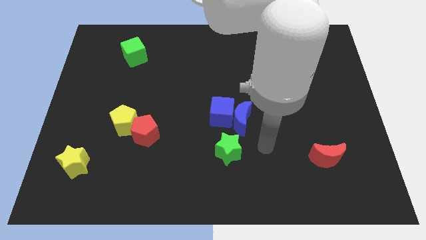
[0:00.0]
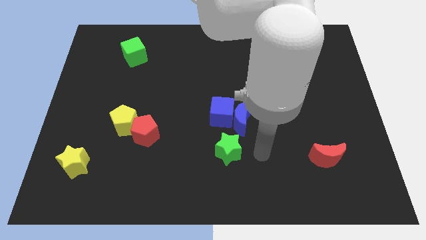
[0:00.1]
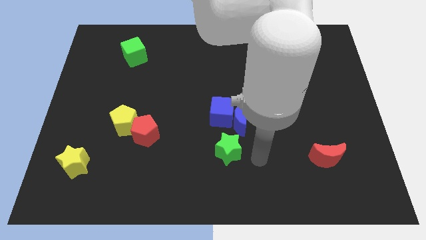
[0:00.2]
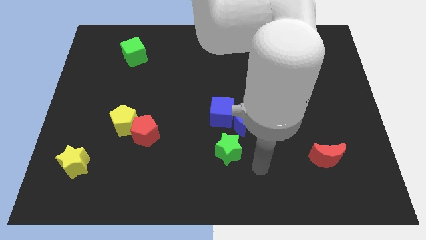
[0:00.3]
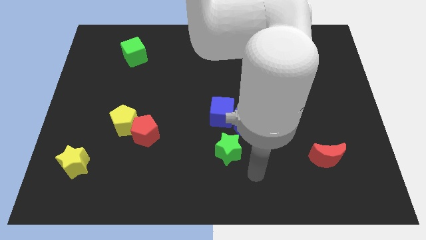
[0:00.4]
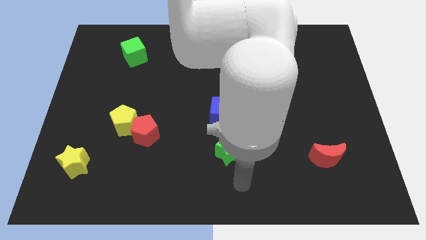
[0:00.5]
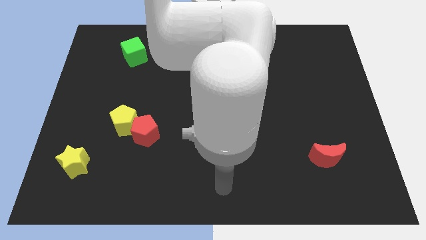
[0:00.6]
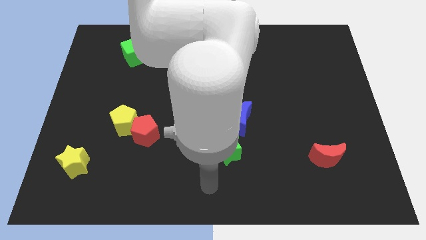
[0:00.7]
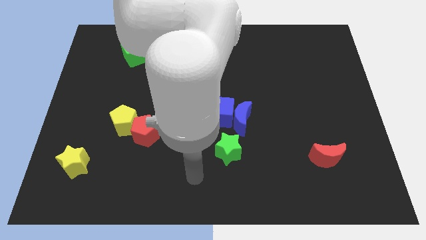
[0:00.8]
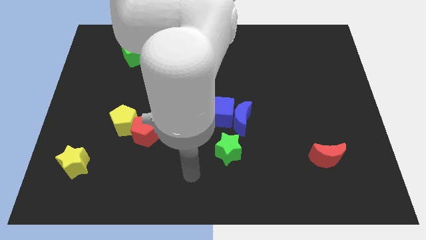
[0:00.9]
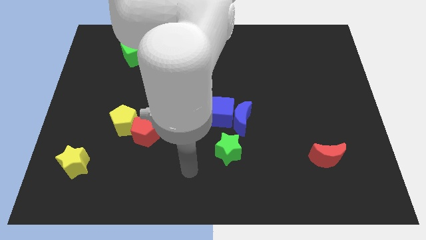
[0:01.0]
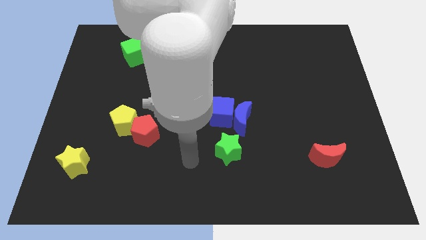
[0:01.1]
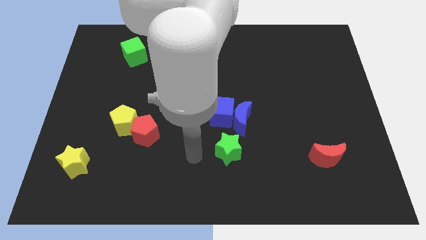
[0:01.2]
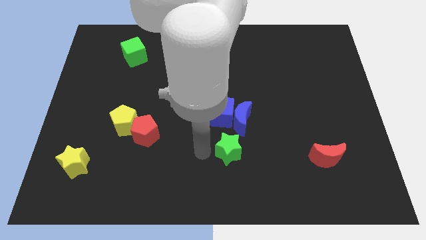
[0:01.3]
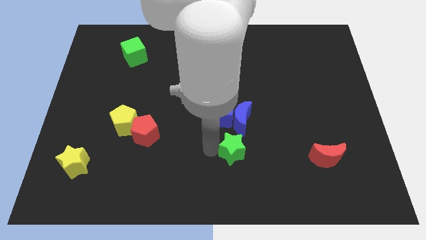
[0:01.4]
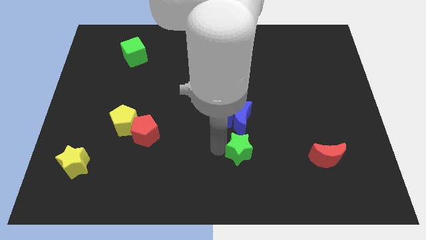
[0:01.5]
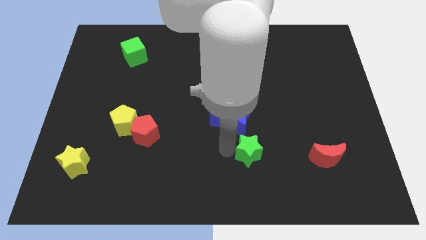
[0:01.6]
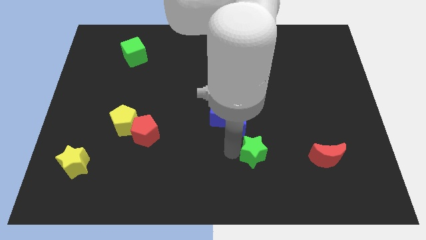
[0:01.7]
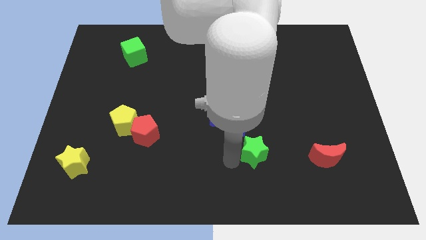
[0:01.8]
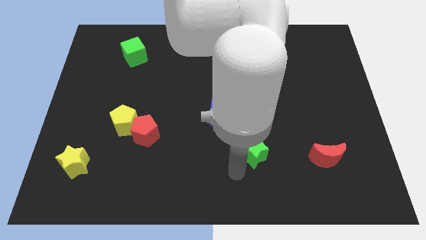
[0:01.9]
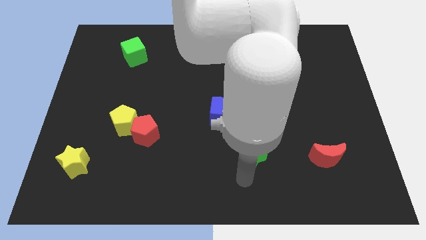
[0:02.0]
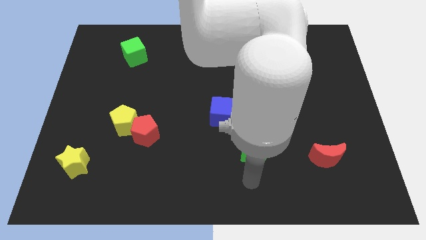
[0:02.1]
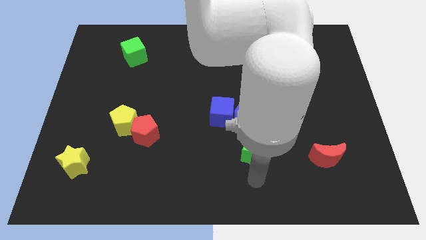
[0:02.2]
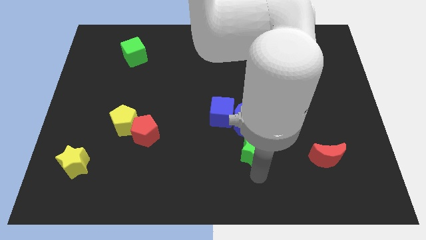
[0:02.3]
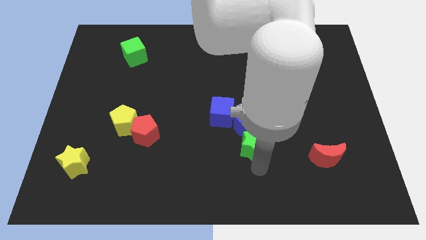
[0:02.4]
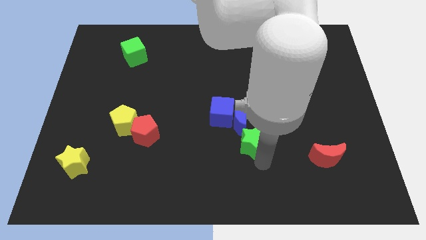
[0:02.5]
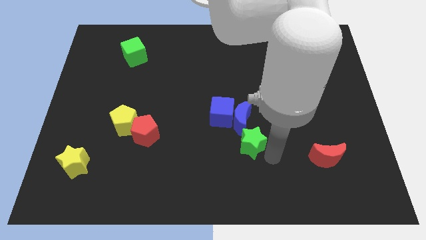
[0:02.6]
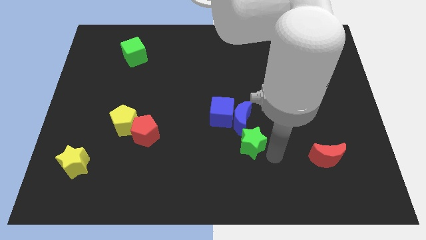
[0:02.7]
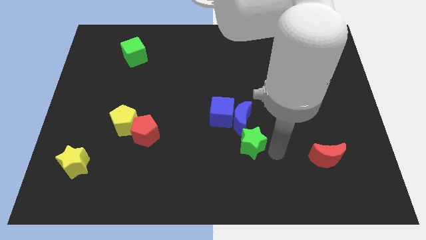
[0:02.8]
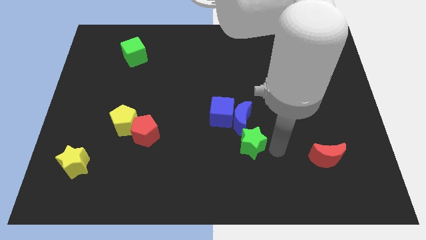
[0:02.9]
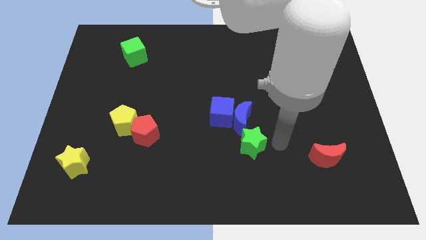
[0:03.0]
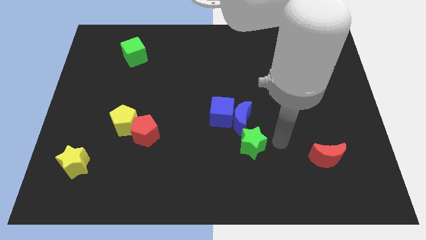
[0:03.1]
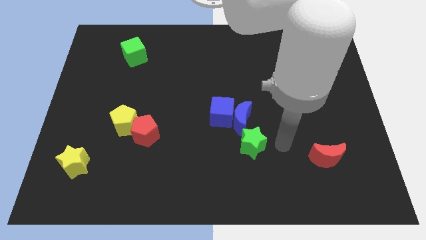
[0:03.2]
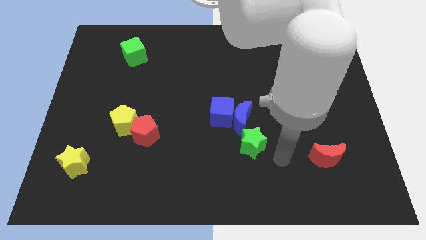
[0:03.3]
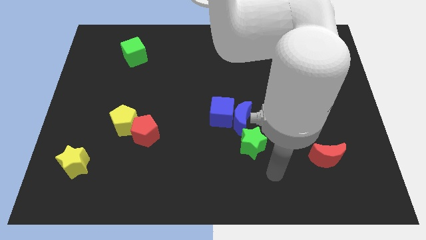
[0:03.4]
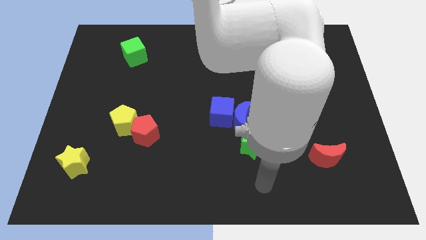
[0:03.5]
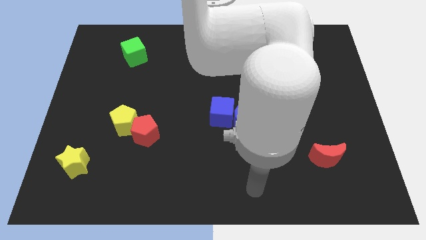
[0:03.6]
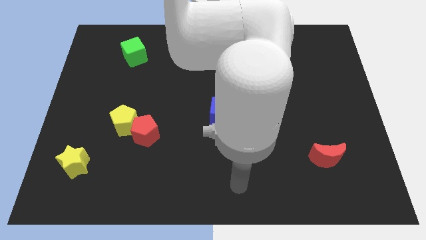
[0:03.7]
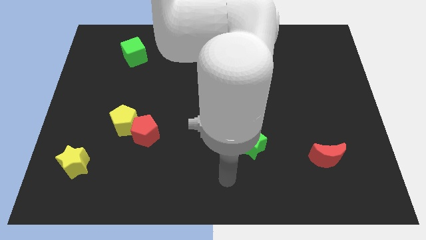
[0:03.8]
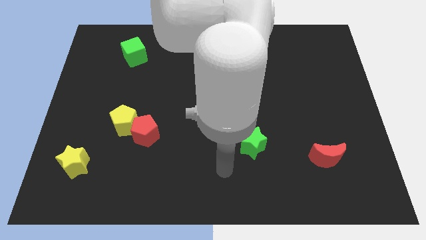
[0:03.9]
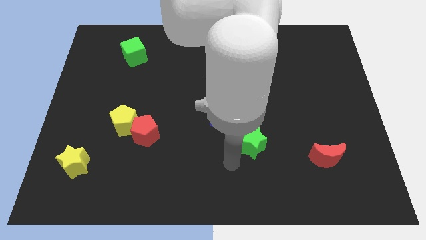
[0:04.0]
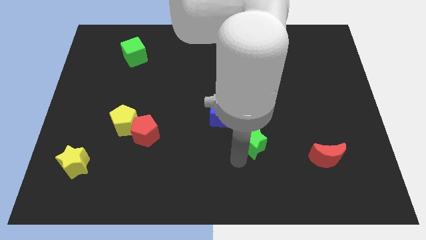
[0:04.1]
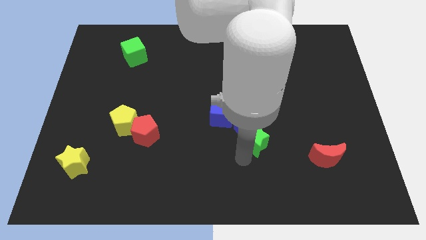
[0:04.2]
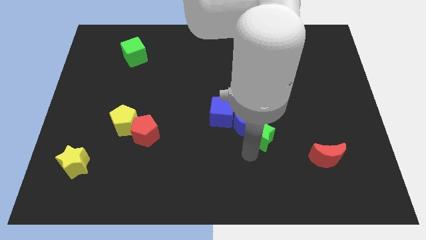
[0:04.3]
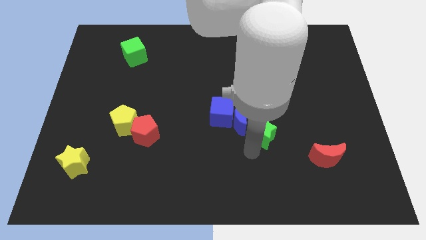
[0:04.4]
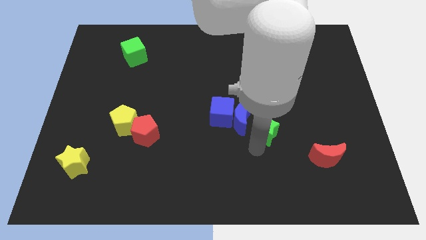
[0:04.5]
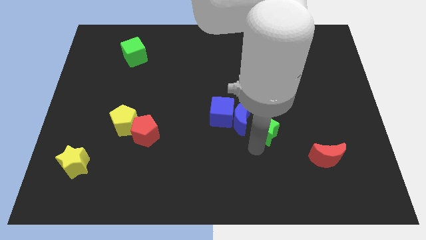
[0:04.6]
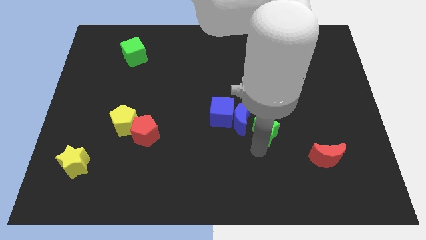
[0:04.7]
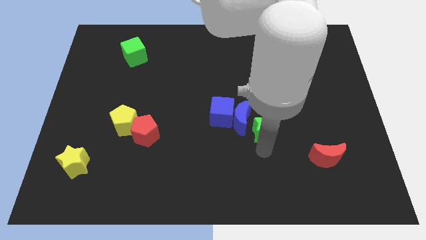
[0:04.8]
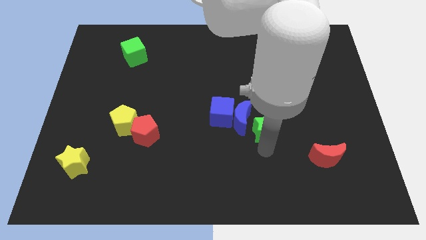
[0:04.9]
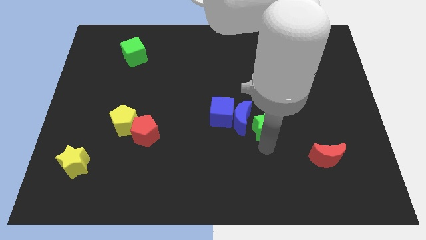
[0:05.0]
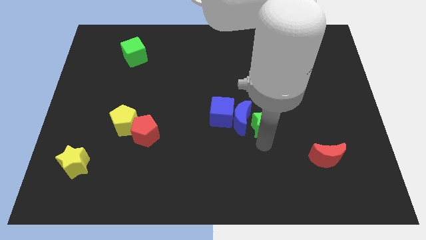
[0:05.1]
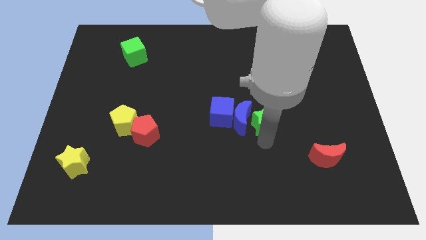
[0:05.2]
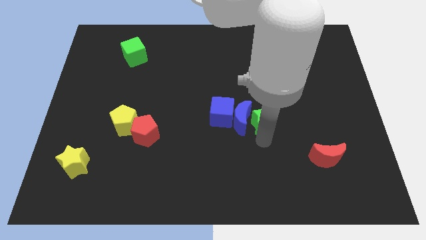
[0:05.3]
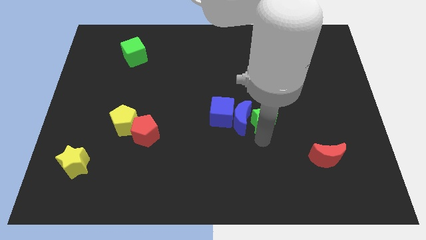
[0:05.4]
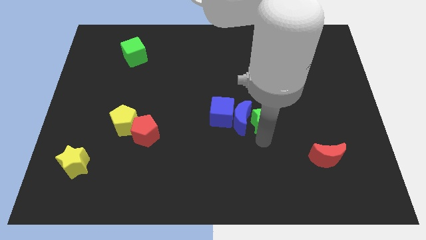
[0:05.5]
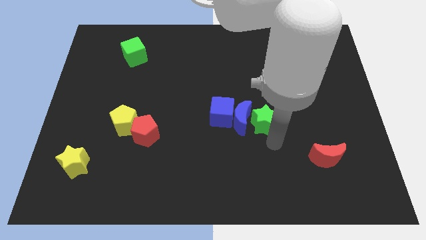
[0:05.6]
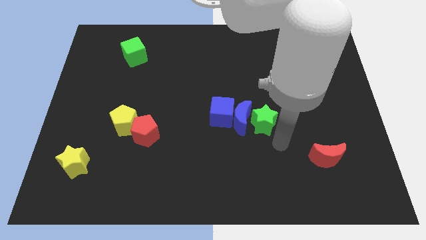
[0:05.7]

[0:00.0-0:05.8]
put the green star on the right side of the blue crescent

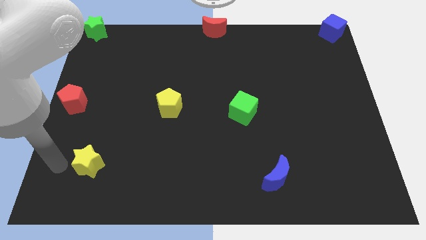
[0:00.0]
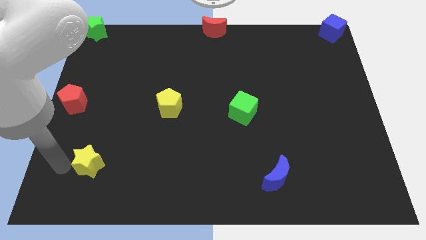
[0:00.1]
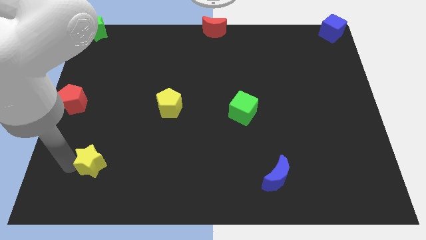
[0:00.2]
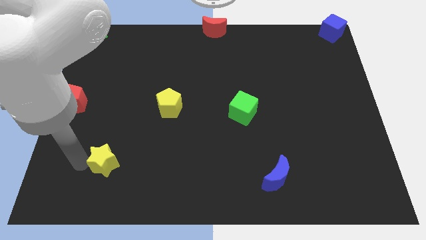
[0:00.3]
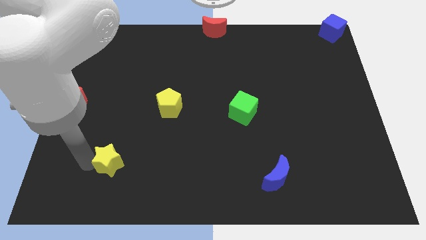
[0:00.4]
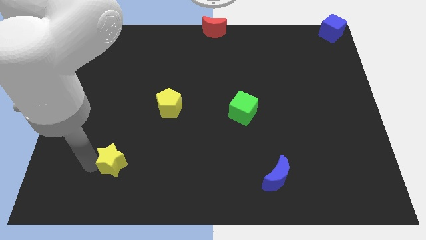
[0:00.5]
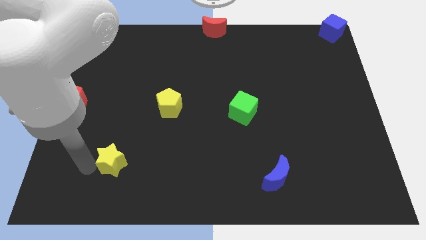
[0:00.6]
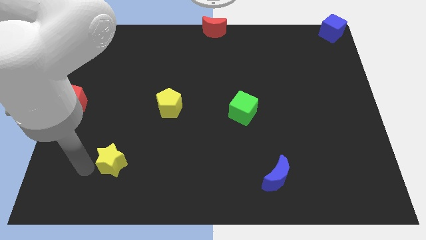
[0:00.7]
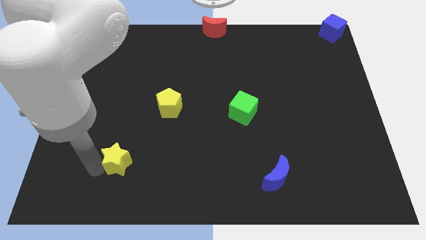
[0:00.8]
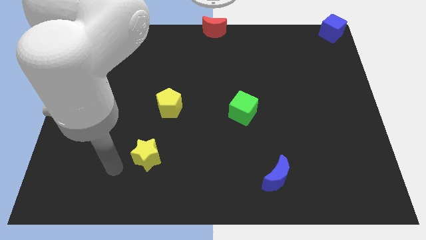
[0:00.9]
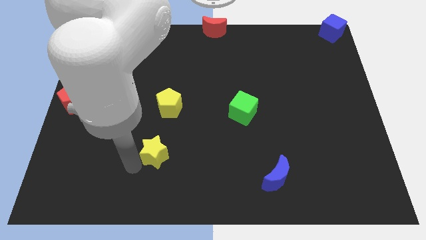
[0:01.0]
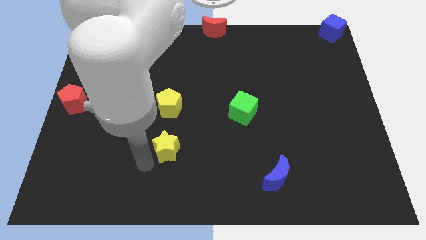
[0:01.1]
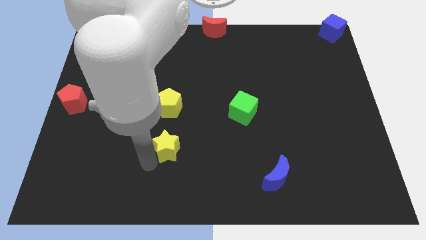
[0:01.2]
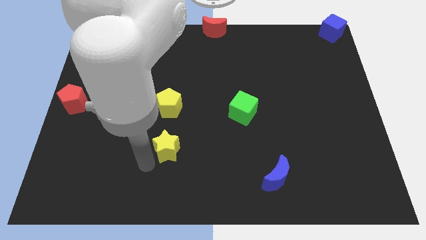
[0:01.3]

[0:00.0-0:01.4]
move the yellow star vertically below the yellow pentagon

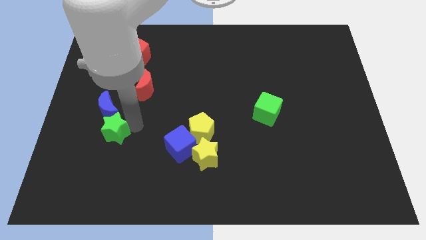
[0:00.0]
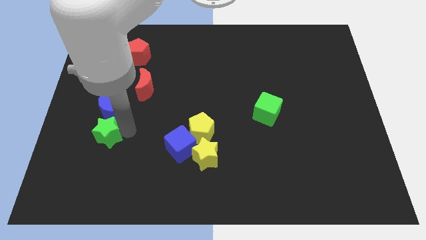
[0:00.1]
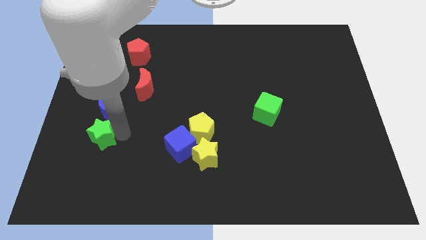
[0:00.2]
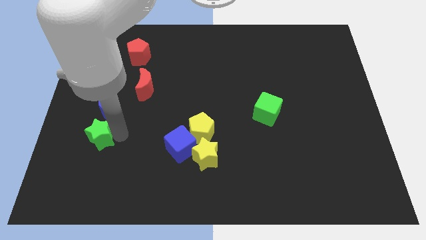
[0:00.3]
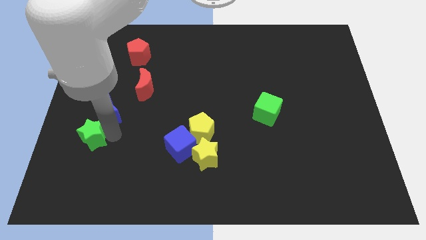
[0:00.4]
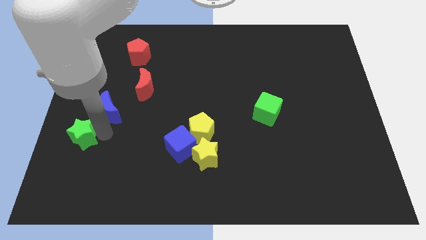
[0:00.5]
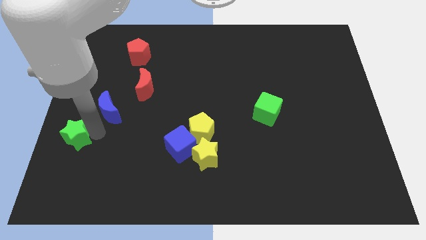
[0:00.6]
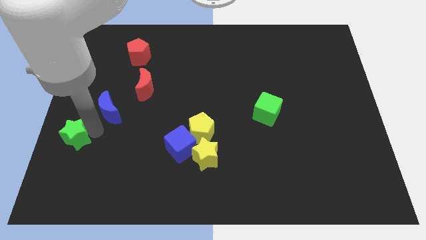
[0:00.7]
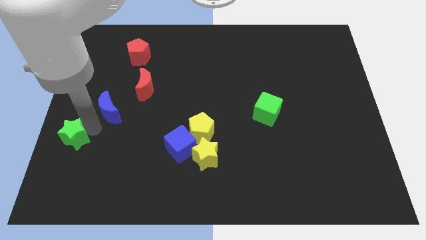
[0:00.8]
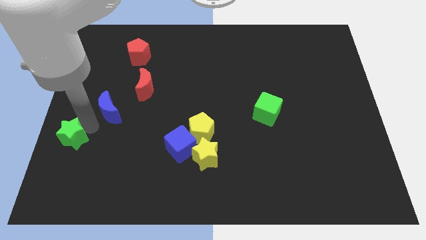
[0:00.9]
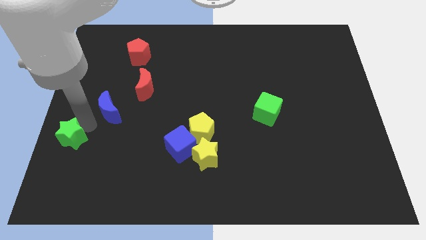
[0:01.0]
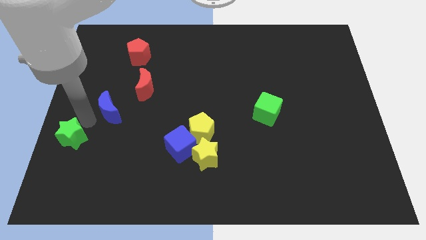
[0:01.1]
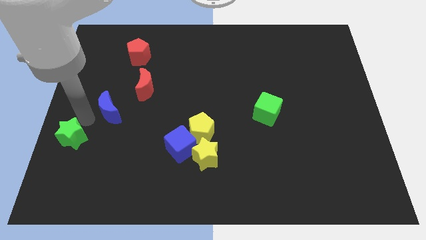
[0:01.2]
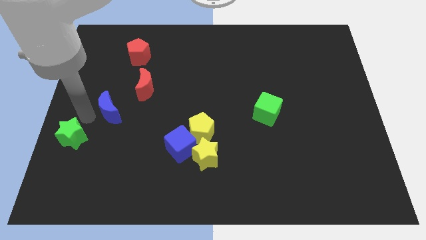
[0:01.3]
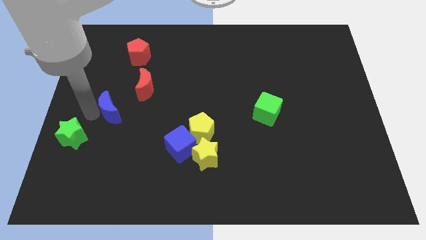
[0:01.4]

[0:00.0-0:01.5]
push green star slightly towards left

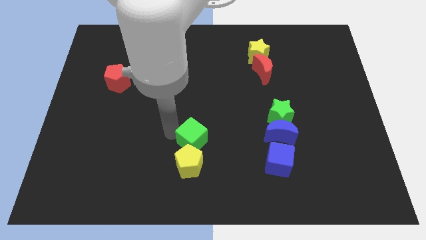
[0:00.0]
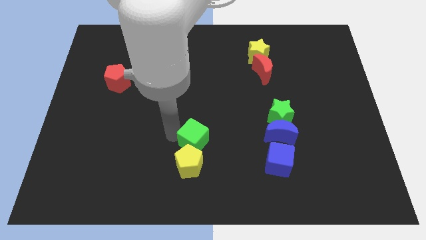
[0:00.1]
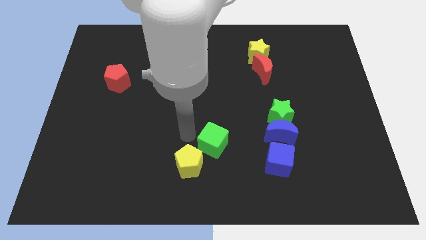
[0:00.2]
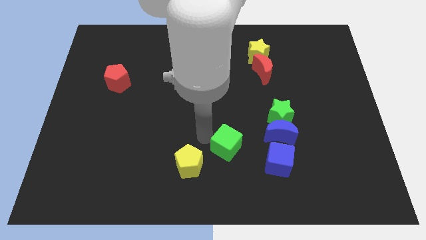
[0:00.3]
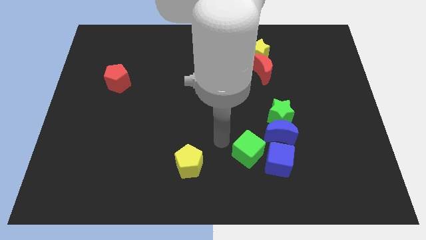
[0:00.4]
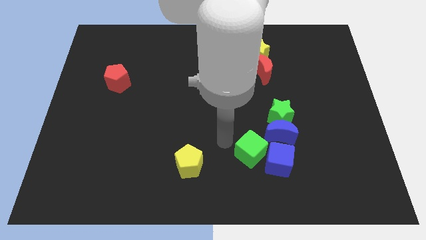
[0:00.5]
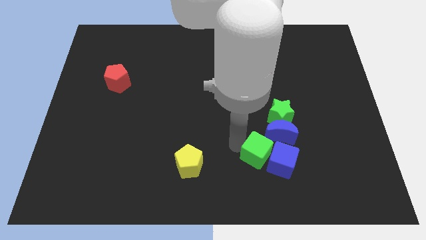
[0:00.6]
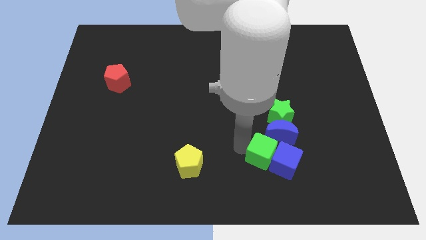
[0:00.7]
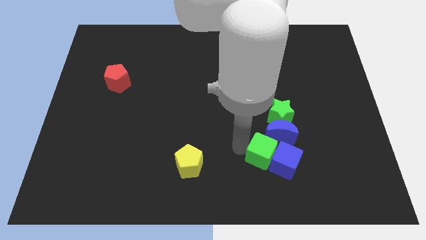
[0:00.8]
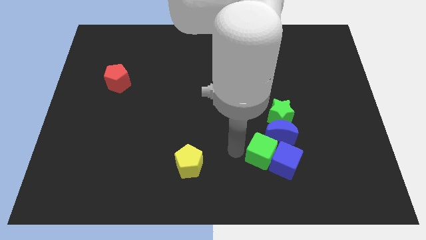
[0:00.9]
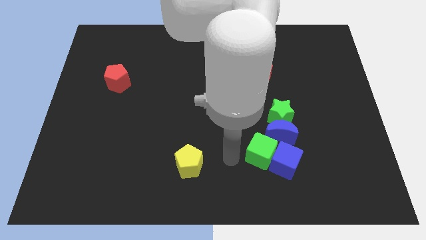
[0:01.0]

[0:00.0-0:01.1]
move the green cube towards the blue cube
